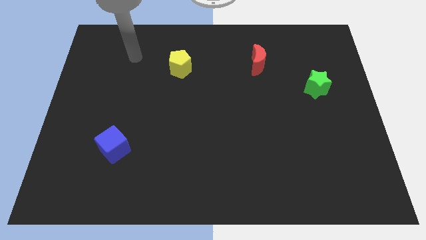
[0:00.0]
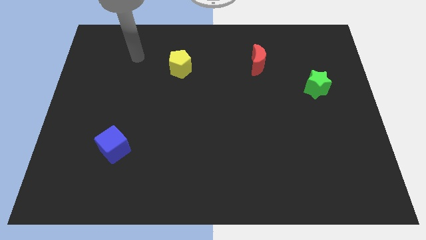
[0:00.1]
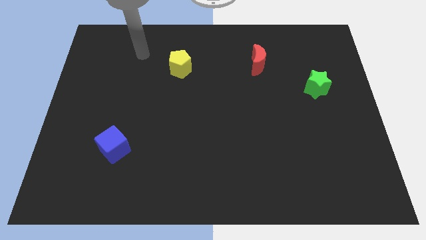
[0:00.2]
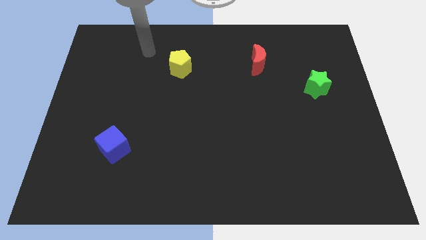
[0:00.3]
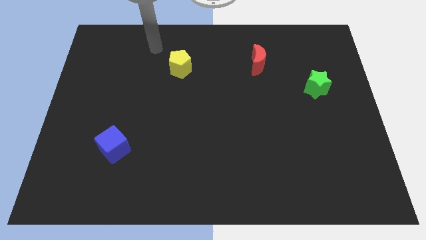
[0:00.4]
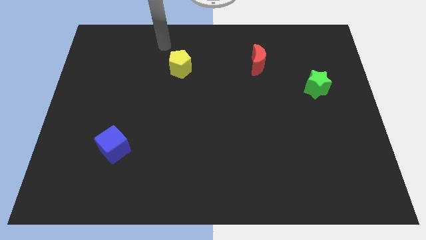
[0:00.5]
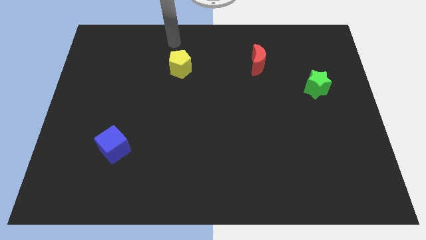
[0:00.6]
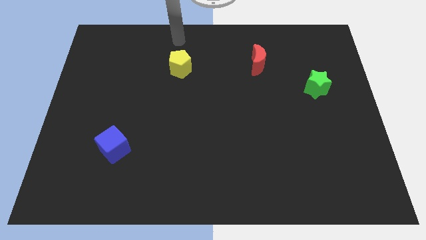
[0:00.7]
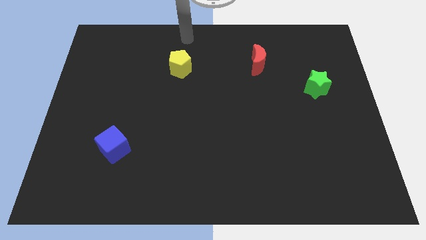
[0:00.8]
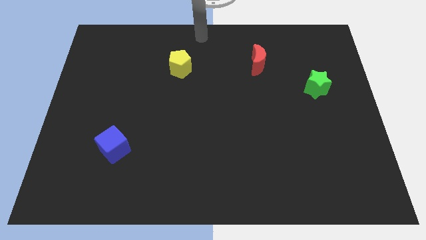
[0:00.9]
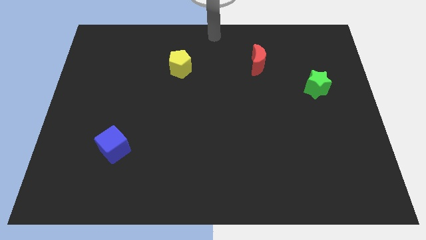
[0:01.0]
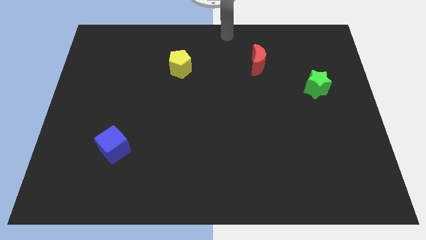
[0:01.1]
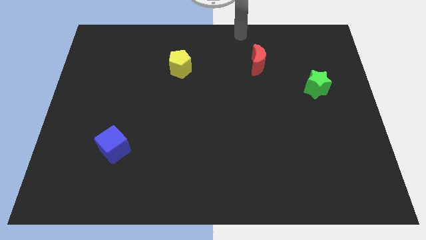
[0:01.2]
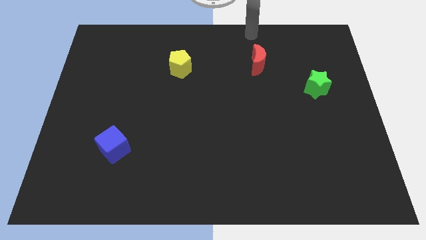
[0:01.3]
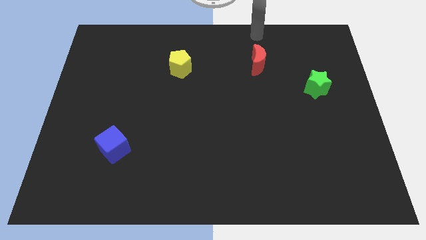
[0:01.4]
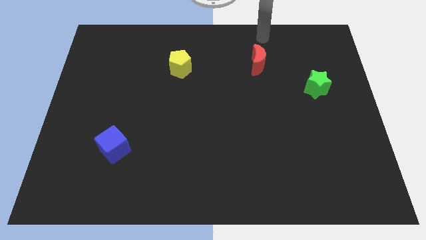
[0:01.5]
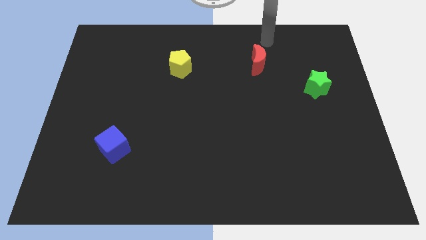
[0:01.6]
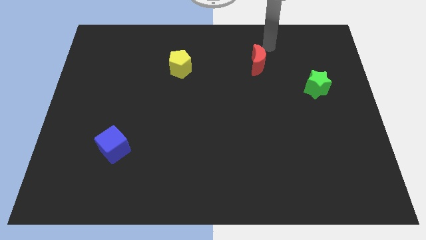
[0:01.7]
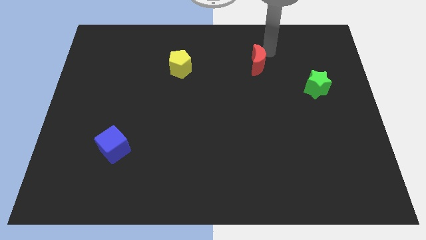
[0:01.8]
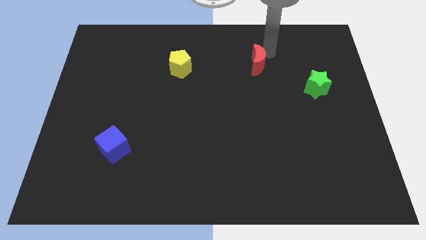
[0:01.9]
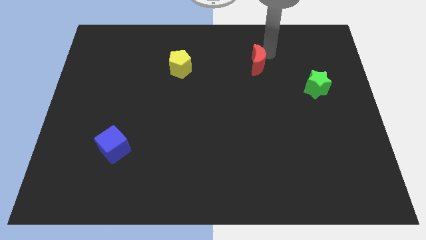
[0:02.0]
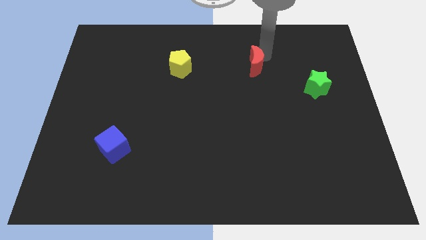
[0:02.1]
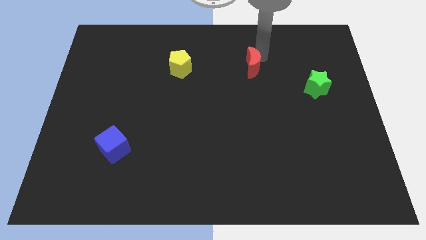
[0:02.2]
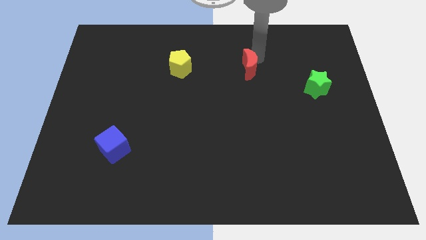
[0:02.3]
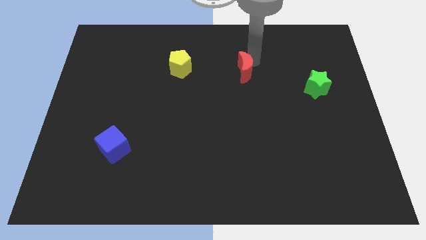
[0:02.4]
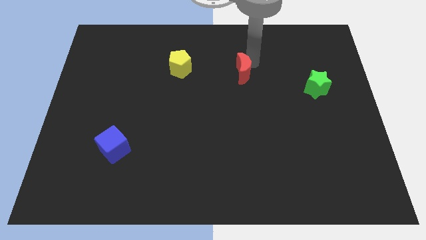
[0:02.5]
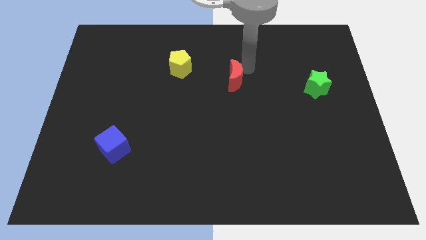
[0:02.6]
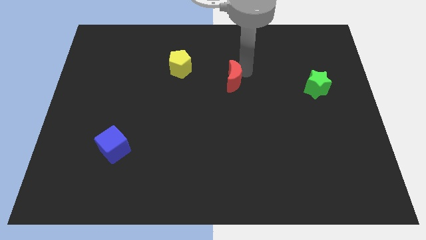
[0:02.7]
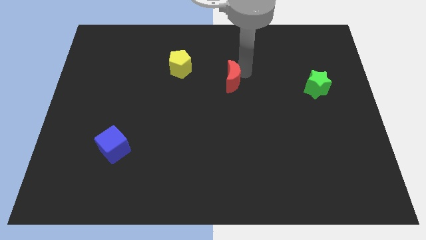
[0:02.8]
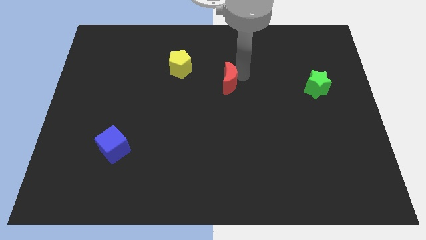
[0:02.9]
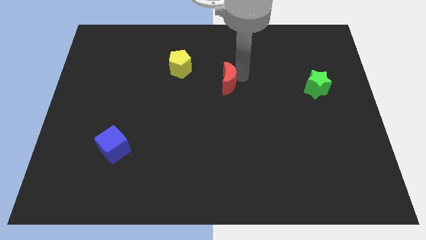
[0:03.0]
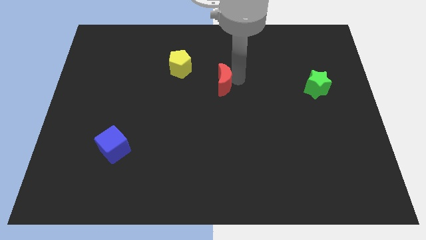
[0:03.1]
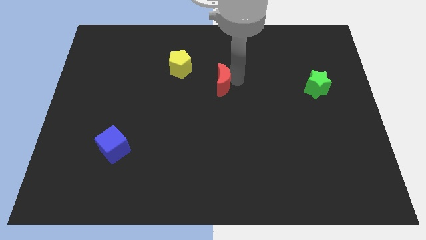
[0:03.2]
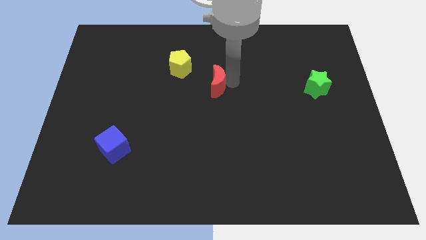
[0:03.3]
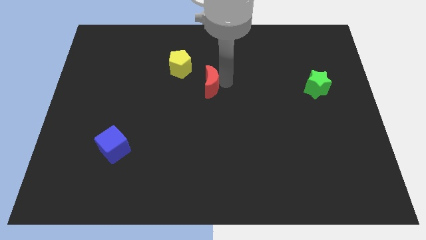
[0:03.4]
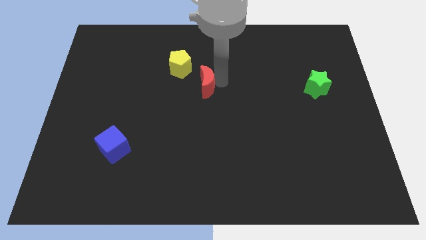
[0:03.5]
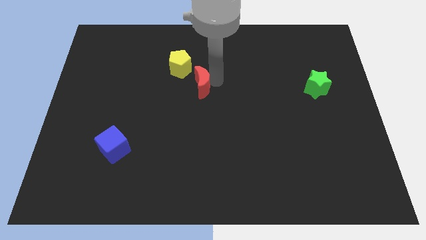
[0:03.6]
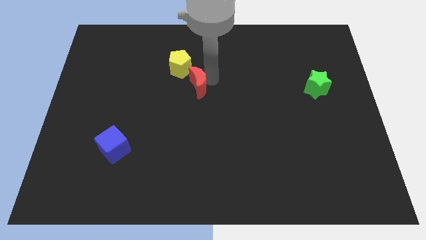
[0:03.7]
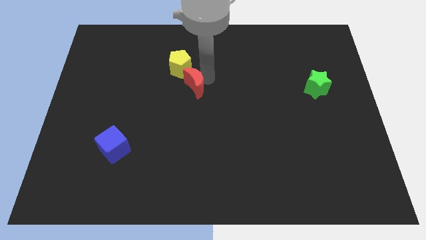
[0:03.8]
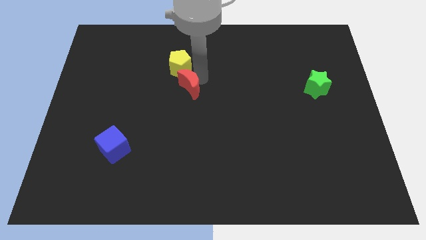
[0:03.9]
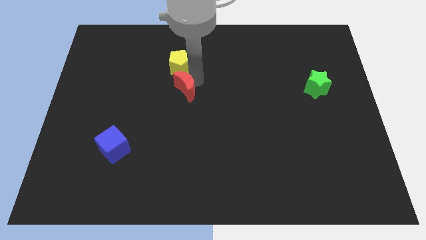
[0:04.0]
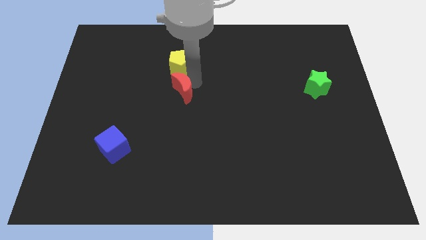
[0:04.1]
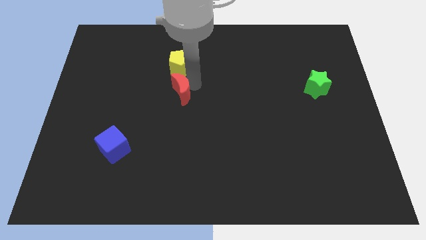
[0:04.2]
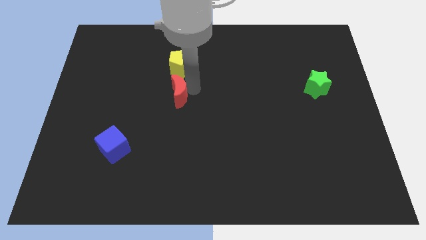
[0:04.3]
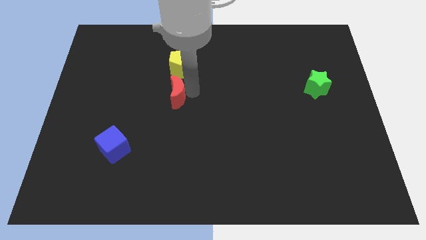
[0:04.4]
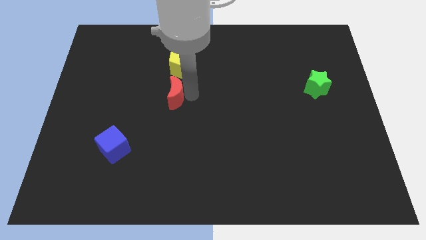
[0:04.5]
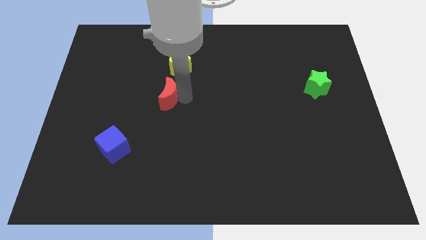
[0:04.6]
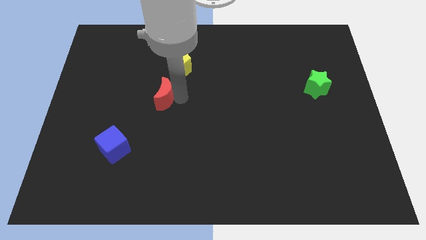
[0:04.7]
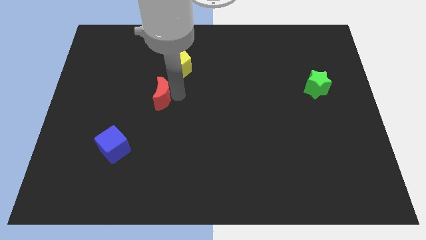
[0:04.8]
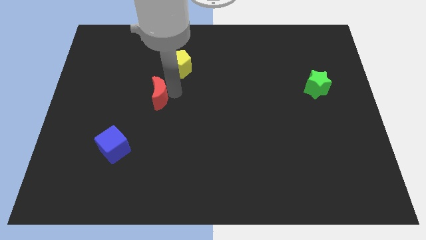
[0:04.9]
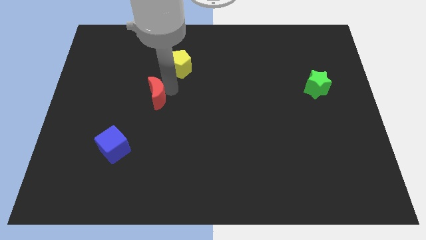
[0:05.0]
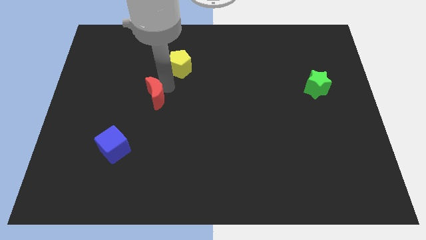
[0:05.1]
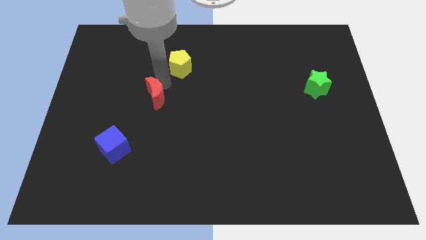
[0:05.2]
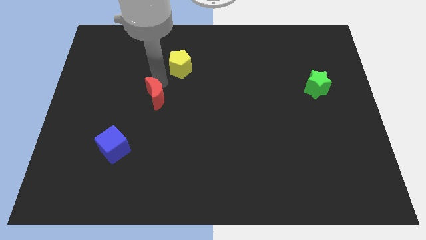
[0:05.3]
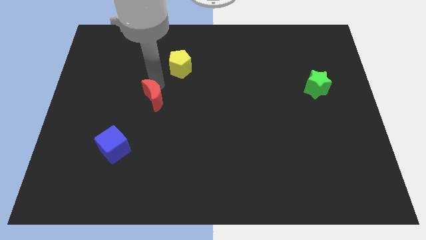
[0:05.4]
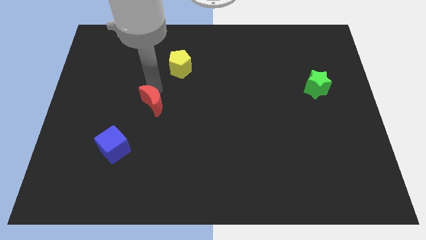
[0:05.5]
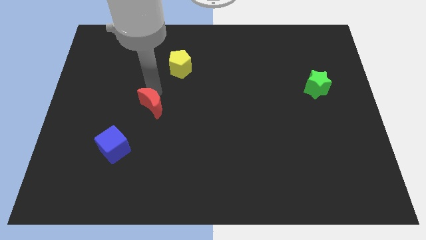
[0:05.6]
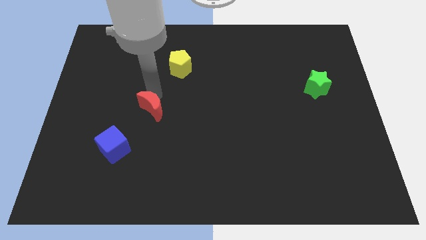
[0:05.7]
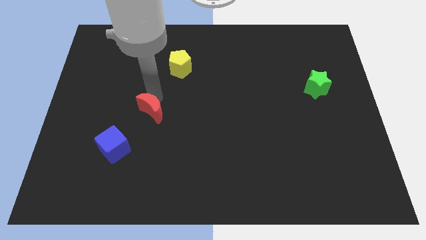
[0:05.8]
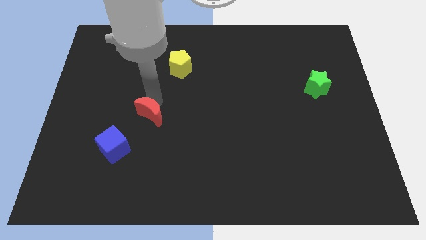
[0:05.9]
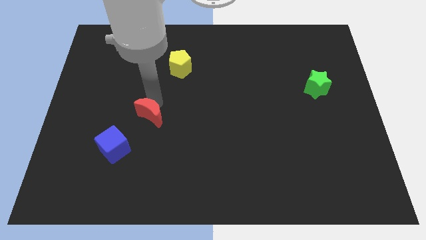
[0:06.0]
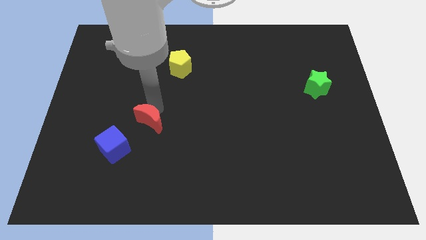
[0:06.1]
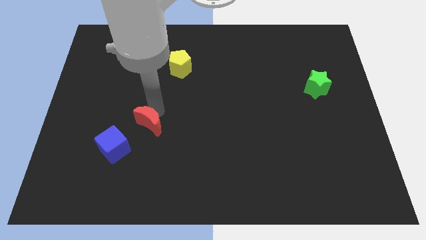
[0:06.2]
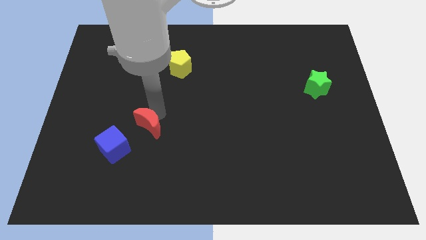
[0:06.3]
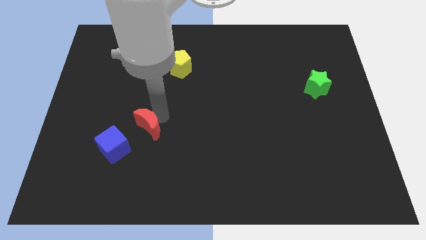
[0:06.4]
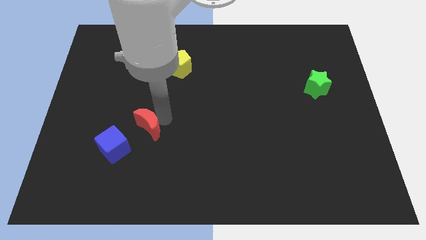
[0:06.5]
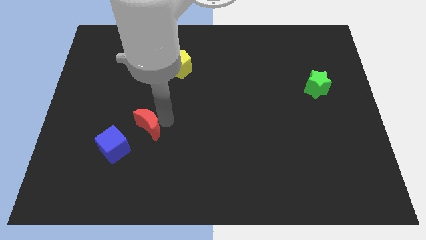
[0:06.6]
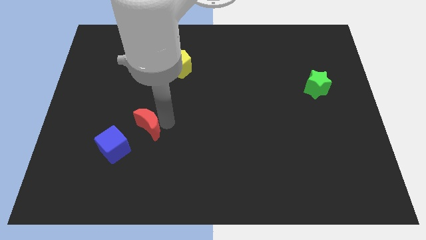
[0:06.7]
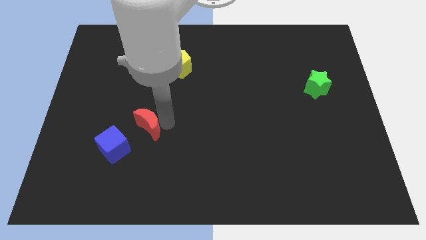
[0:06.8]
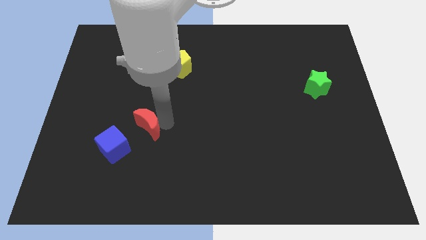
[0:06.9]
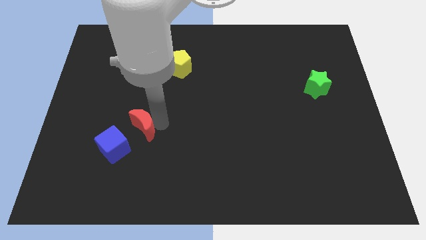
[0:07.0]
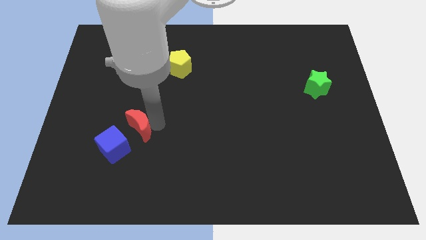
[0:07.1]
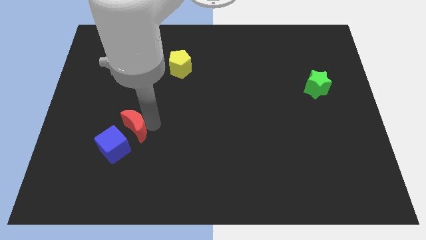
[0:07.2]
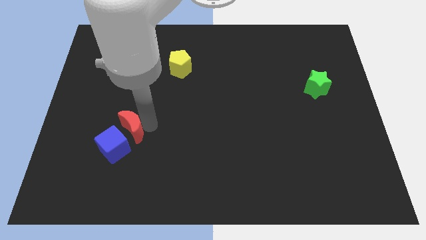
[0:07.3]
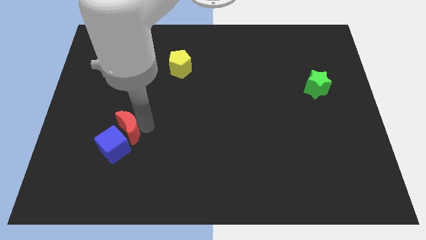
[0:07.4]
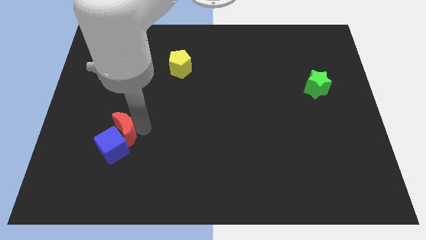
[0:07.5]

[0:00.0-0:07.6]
slide the red block close to the cube

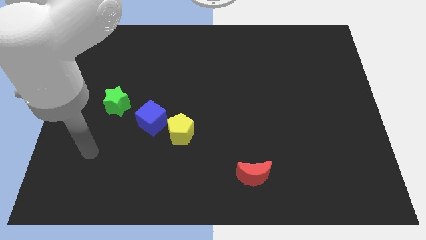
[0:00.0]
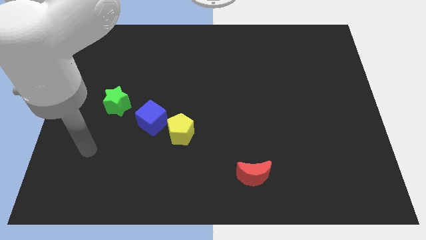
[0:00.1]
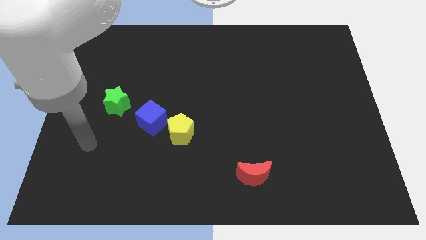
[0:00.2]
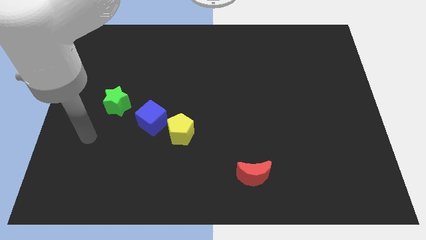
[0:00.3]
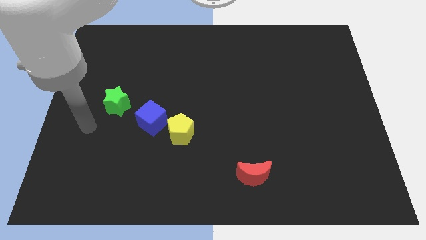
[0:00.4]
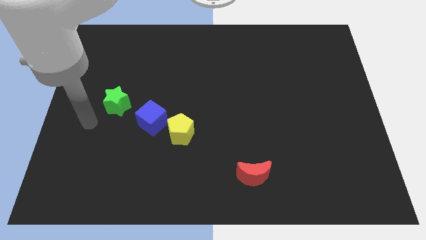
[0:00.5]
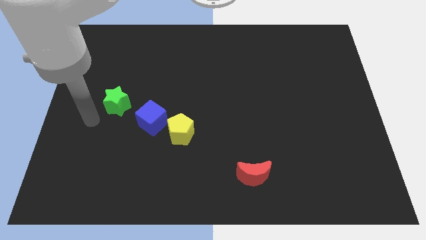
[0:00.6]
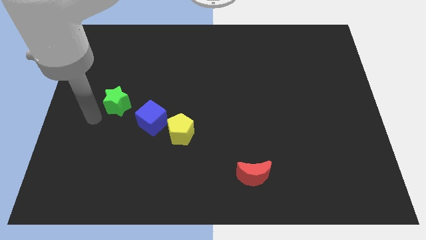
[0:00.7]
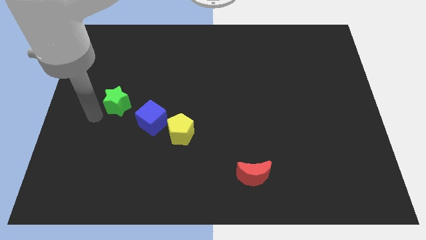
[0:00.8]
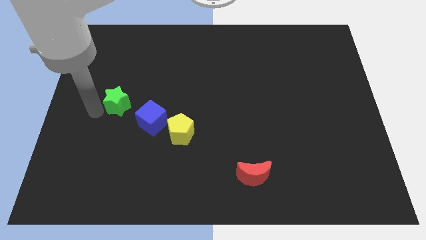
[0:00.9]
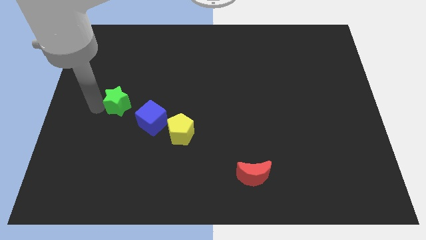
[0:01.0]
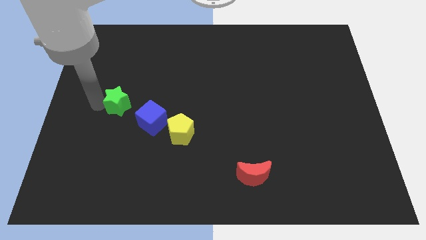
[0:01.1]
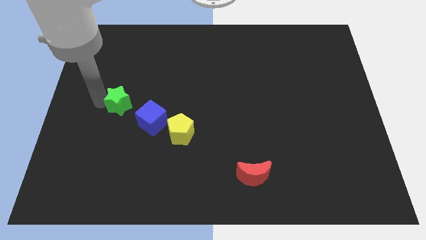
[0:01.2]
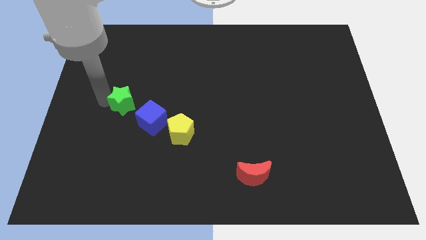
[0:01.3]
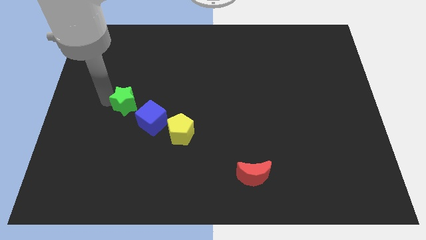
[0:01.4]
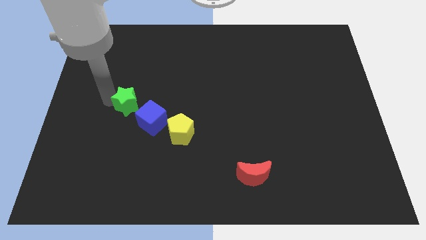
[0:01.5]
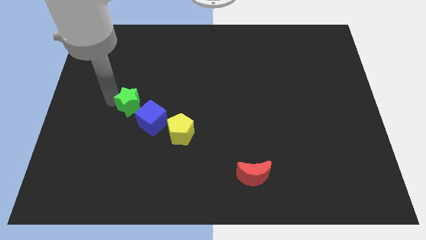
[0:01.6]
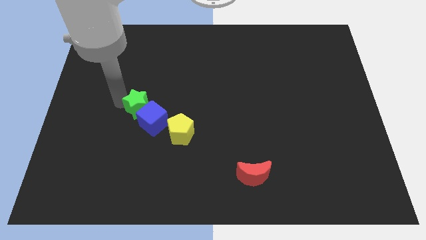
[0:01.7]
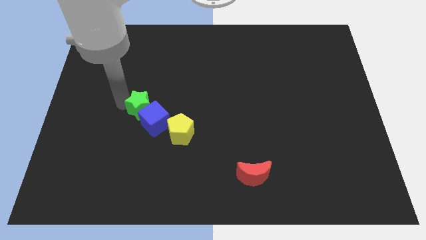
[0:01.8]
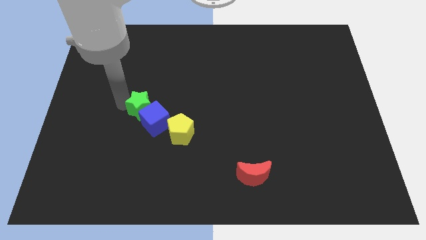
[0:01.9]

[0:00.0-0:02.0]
put the star close to the cube
